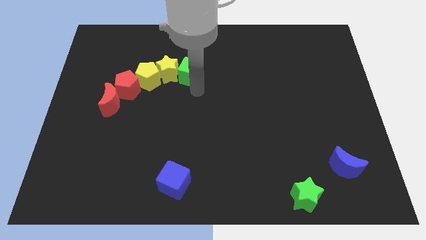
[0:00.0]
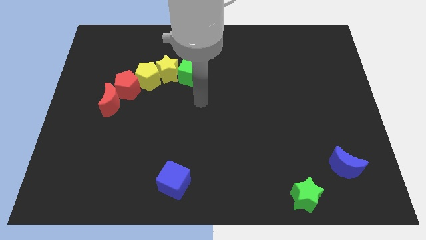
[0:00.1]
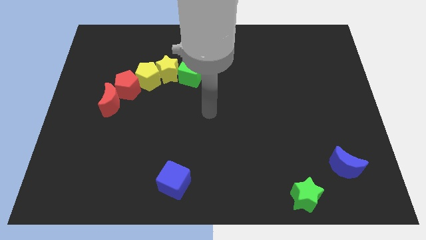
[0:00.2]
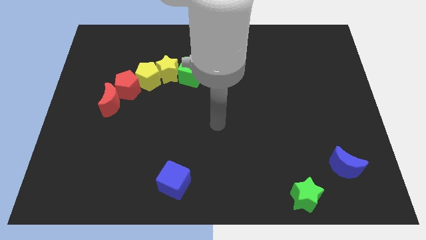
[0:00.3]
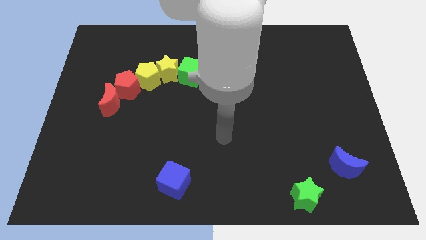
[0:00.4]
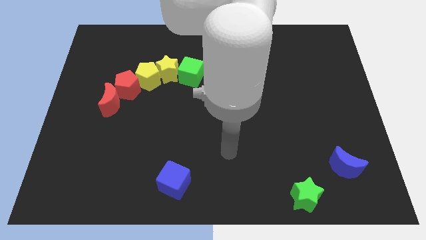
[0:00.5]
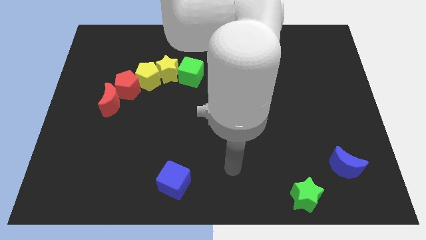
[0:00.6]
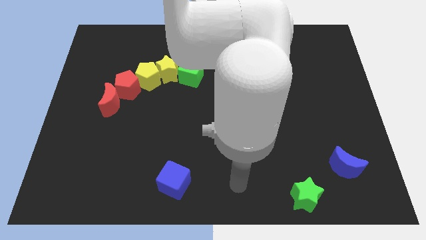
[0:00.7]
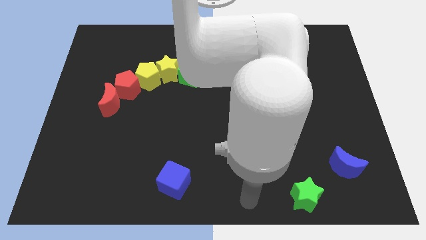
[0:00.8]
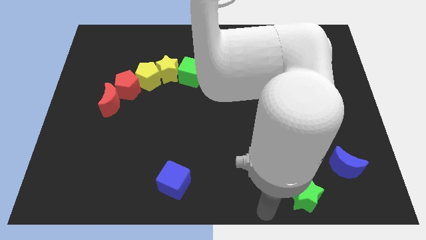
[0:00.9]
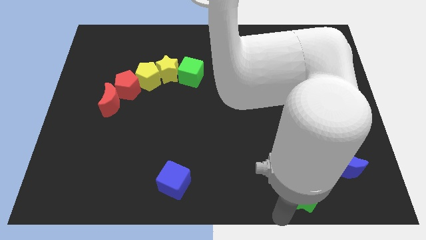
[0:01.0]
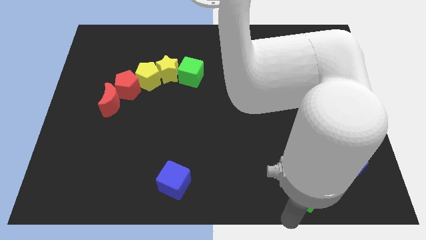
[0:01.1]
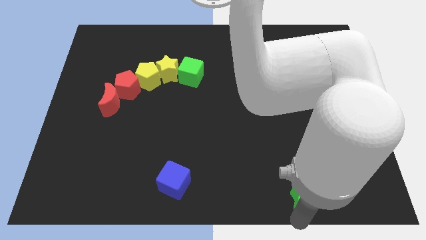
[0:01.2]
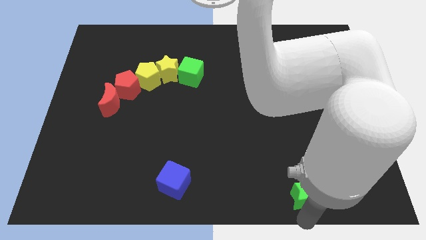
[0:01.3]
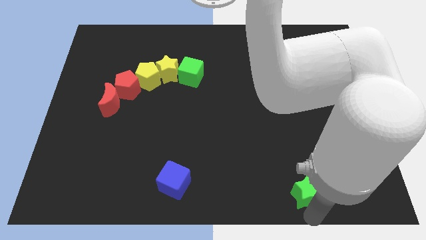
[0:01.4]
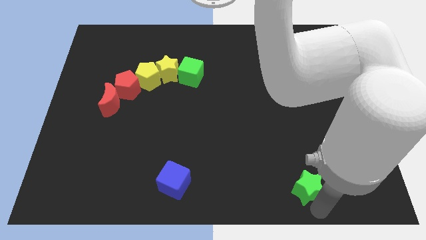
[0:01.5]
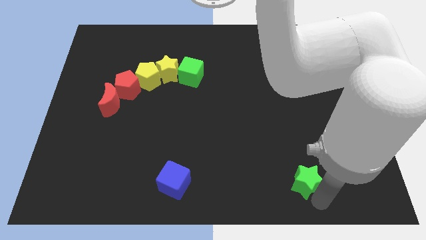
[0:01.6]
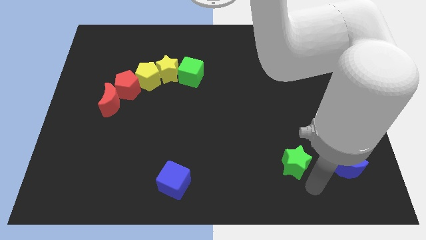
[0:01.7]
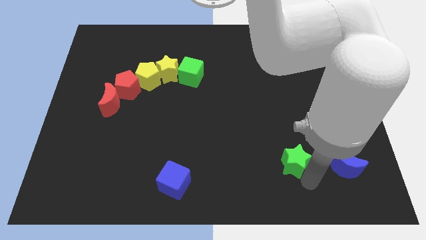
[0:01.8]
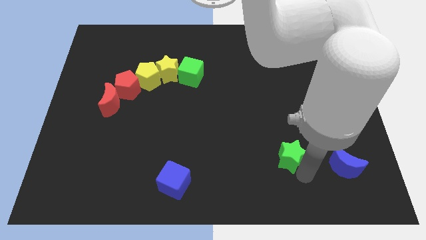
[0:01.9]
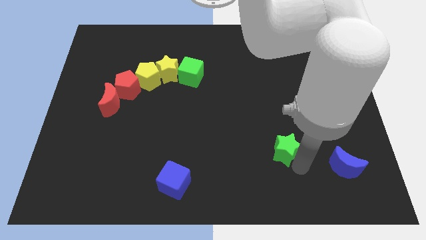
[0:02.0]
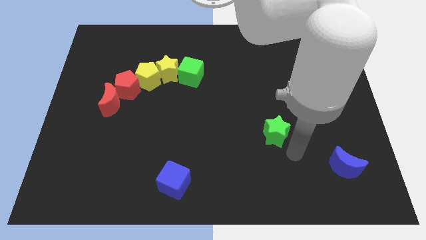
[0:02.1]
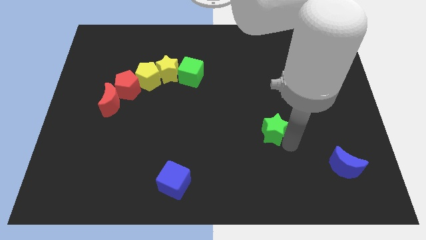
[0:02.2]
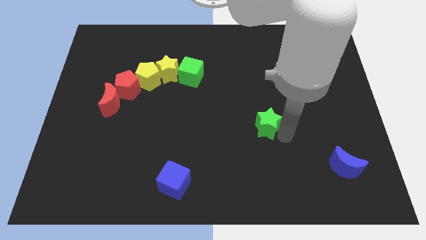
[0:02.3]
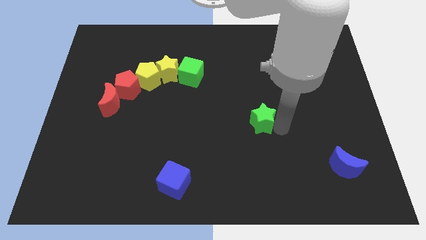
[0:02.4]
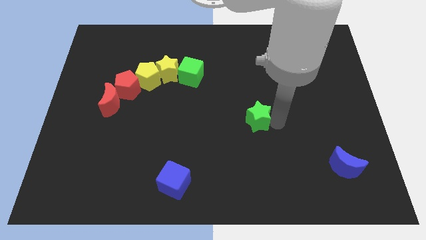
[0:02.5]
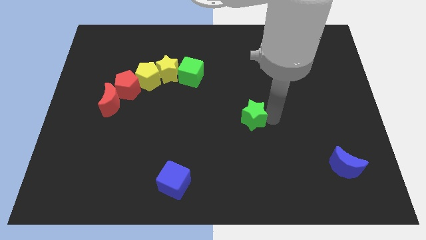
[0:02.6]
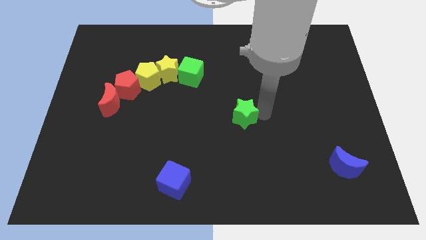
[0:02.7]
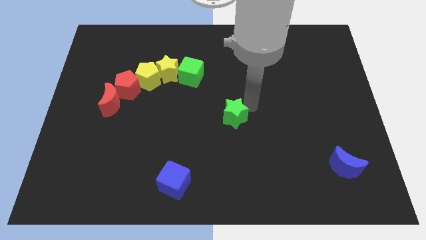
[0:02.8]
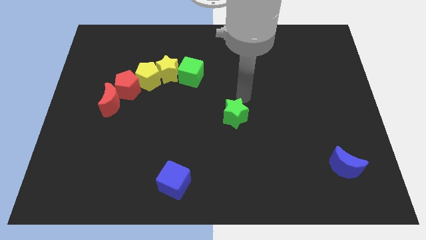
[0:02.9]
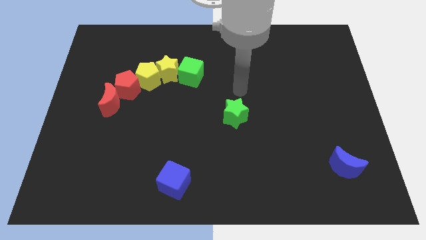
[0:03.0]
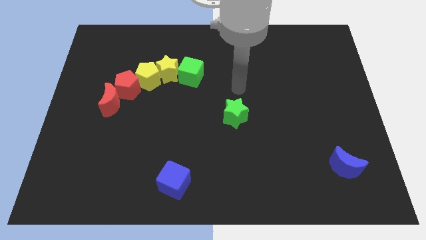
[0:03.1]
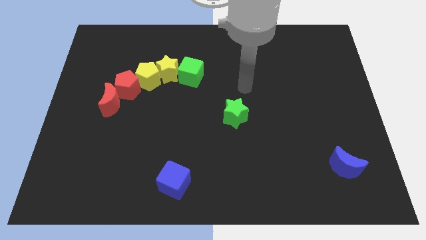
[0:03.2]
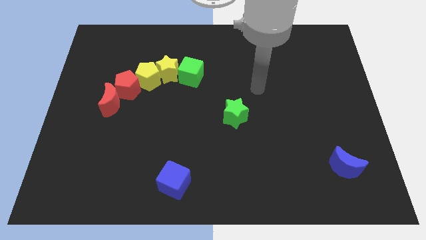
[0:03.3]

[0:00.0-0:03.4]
put the green star in between the green cube and blue crescent

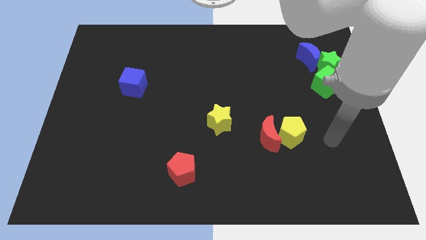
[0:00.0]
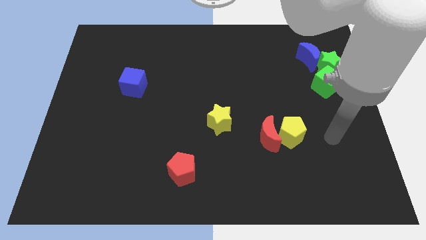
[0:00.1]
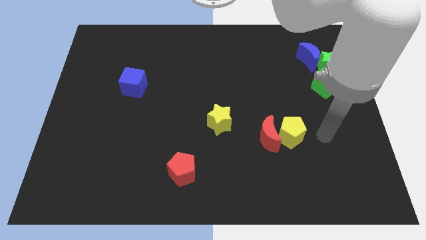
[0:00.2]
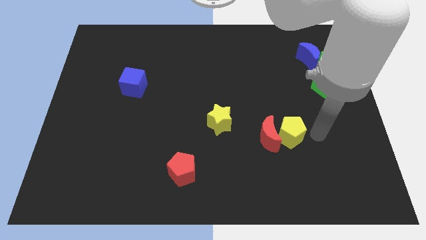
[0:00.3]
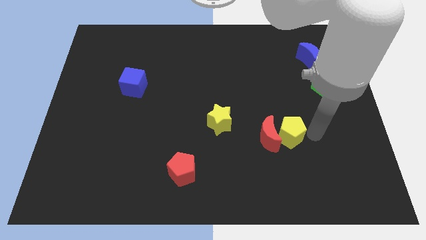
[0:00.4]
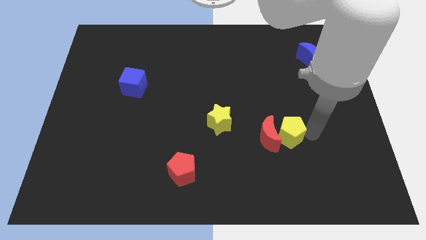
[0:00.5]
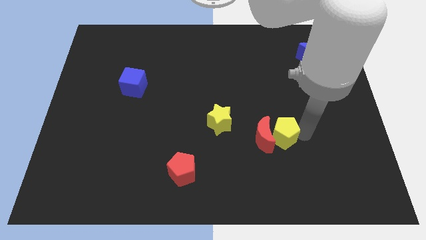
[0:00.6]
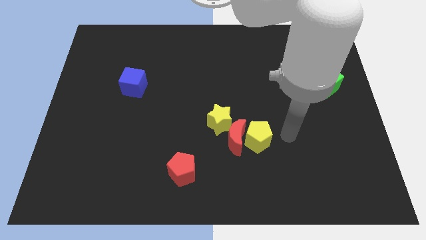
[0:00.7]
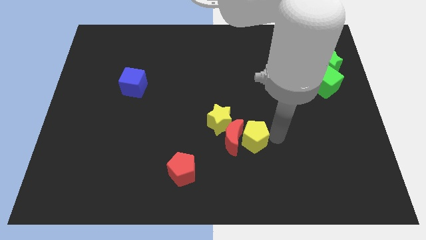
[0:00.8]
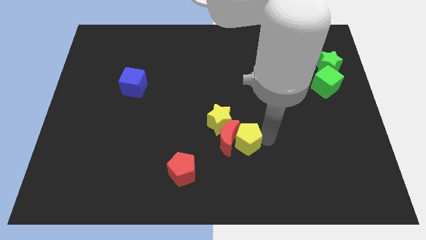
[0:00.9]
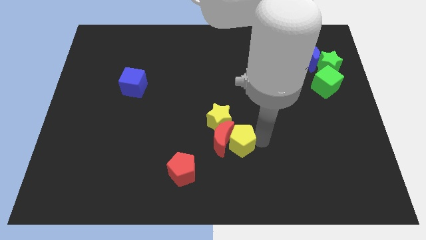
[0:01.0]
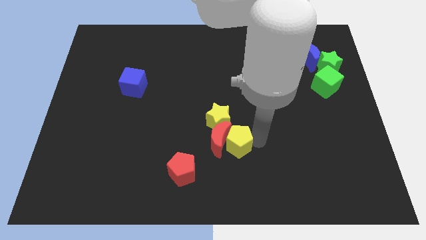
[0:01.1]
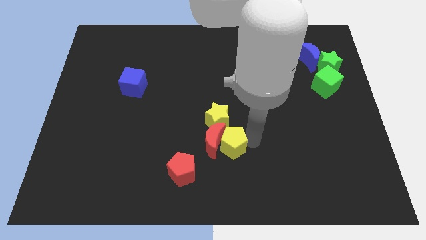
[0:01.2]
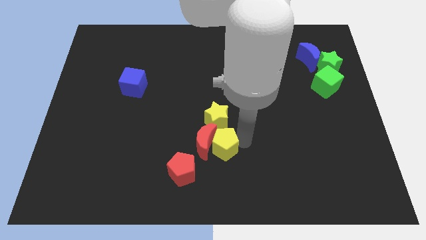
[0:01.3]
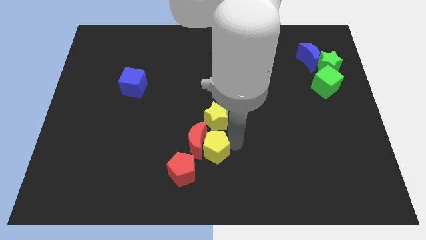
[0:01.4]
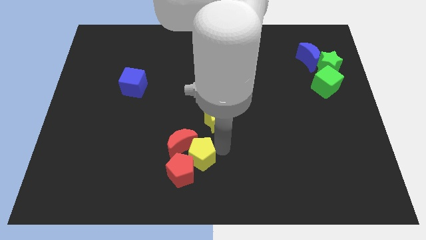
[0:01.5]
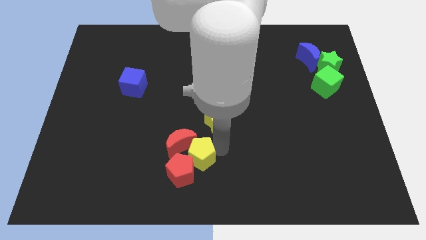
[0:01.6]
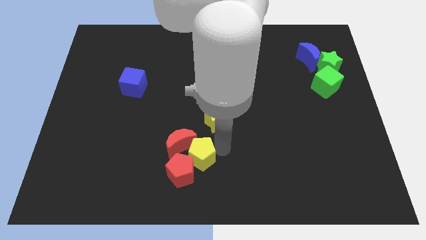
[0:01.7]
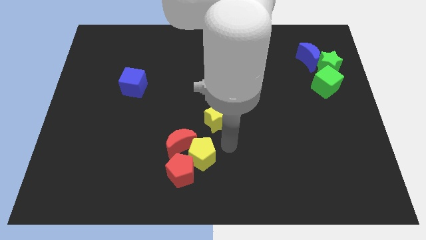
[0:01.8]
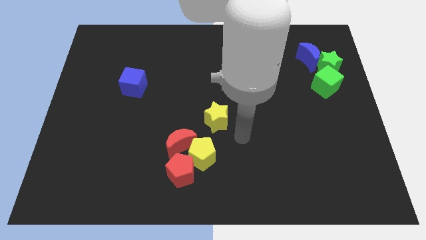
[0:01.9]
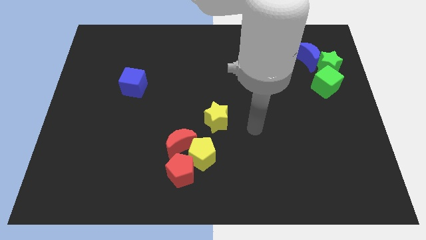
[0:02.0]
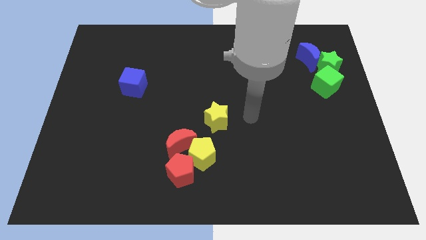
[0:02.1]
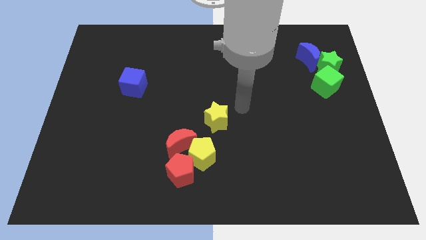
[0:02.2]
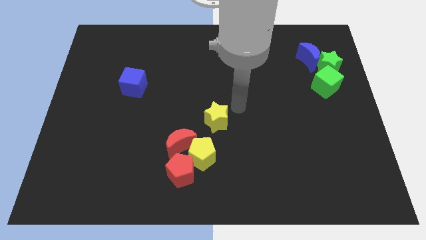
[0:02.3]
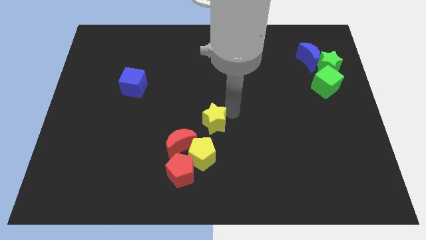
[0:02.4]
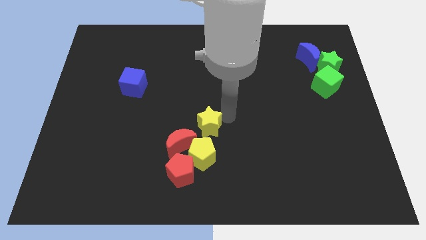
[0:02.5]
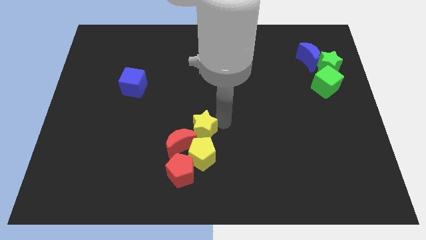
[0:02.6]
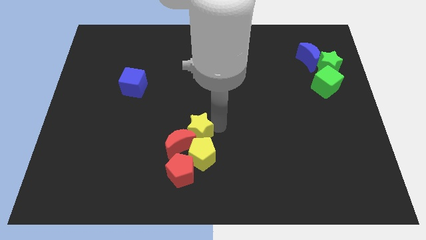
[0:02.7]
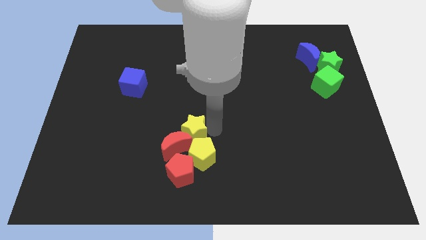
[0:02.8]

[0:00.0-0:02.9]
move yellow star into the group of blocks

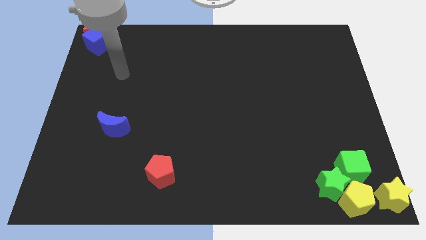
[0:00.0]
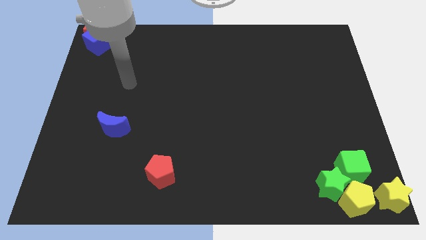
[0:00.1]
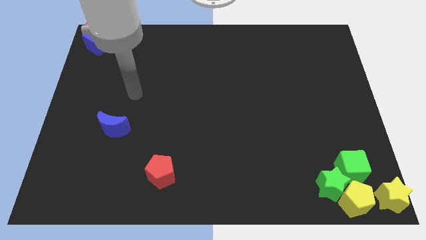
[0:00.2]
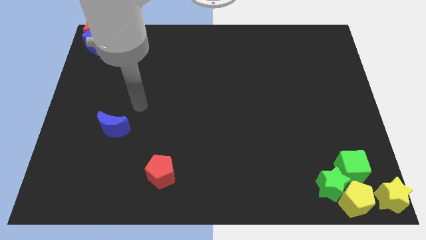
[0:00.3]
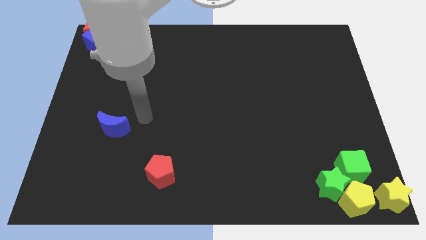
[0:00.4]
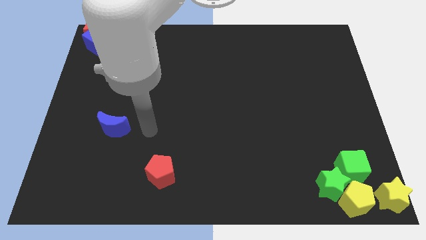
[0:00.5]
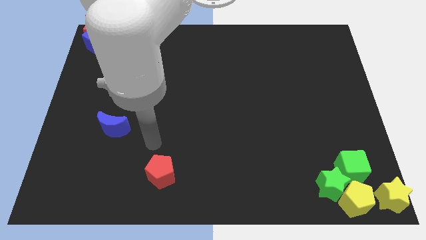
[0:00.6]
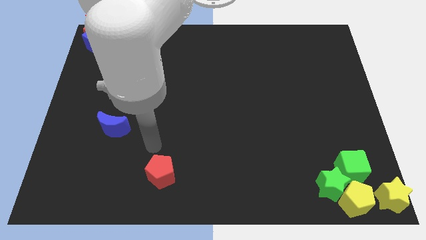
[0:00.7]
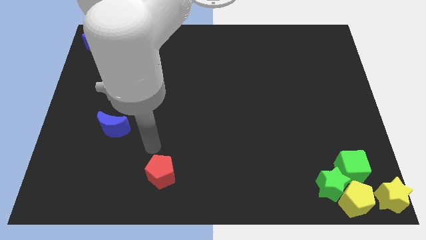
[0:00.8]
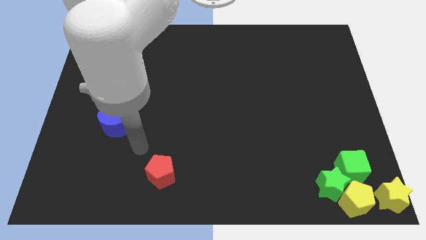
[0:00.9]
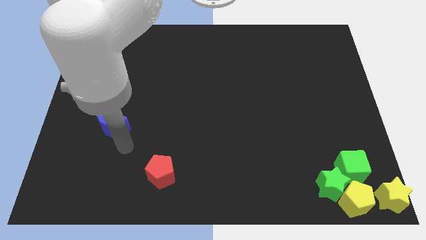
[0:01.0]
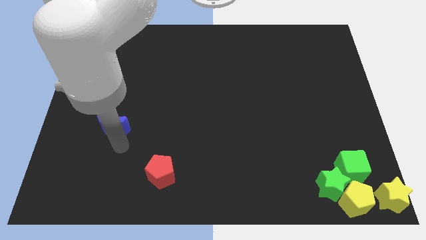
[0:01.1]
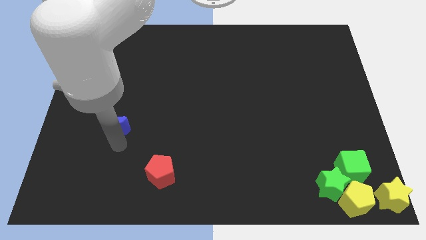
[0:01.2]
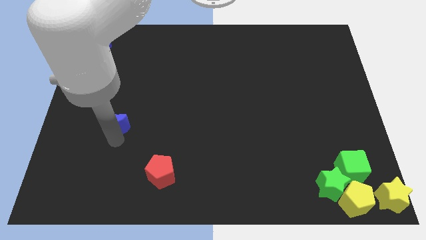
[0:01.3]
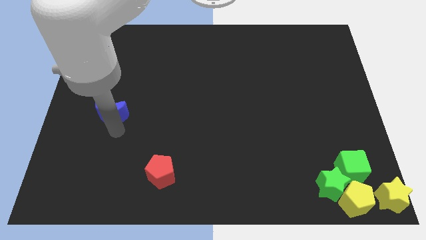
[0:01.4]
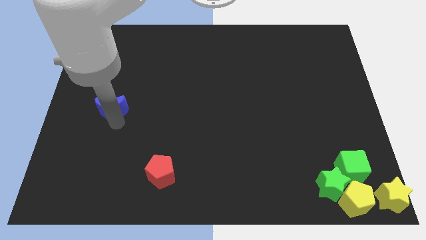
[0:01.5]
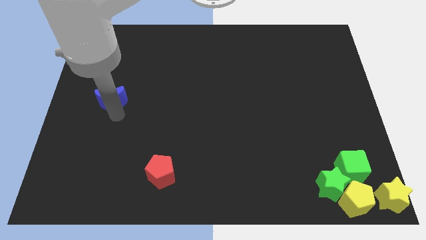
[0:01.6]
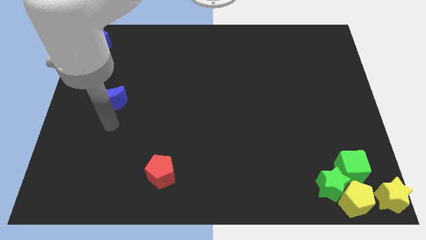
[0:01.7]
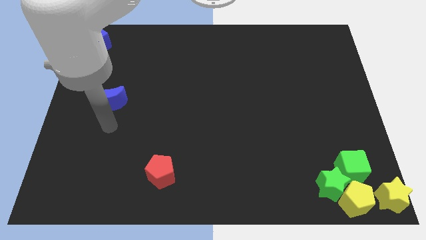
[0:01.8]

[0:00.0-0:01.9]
push the blue crescent slightly to the top side of the board

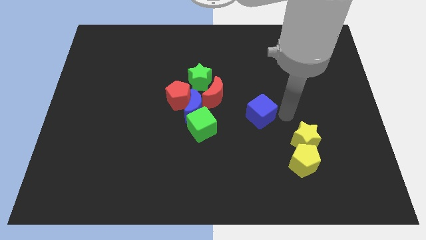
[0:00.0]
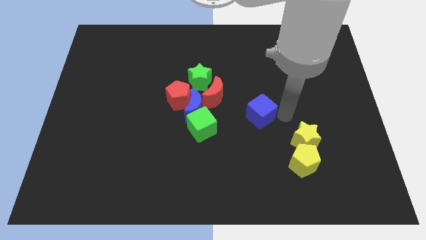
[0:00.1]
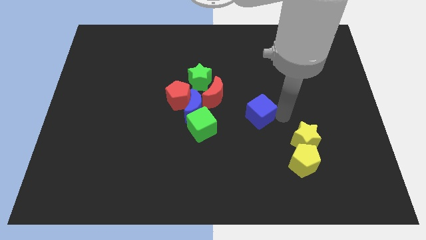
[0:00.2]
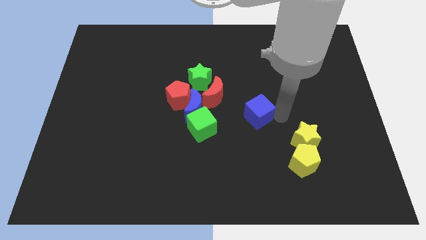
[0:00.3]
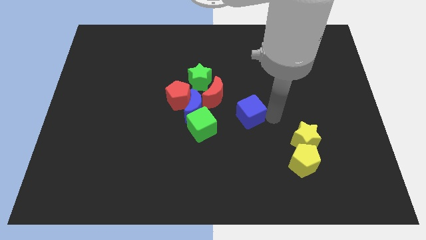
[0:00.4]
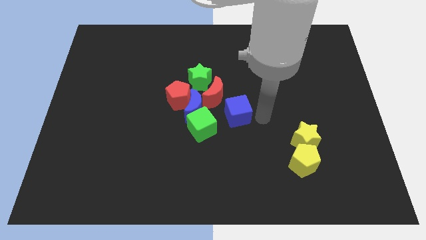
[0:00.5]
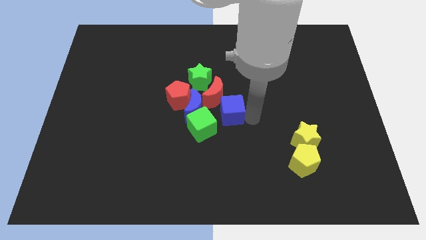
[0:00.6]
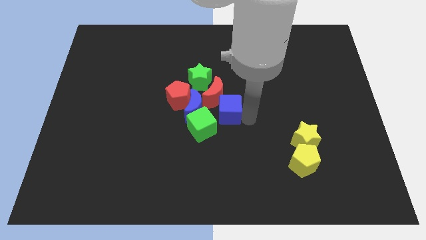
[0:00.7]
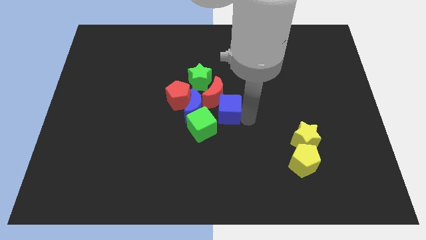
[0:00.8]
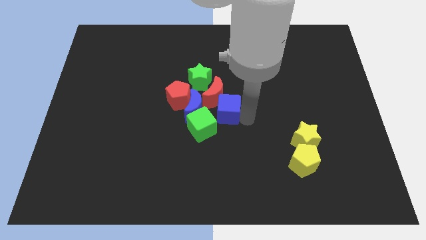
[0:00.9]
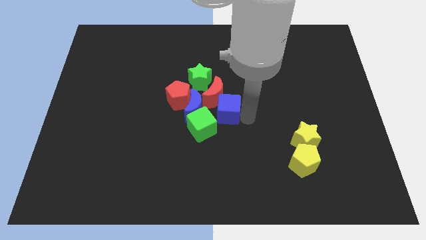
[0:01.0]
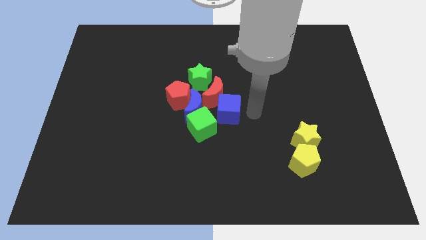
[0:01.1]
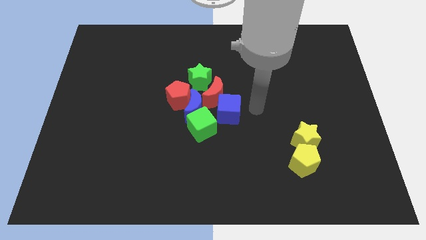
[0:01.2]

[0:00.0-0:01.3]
push blue cube into the group of blocks
